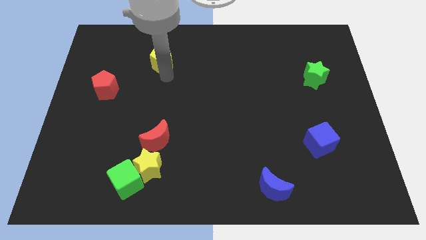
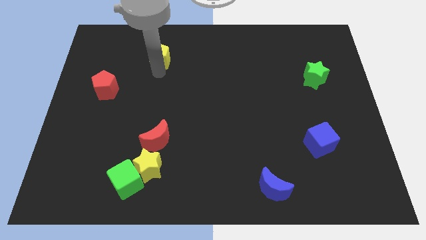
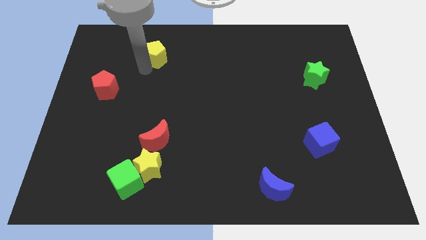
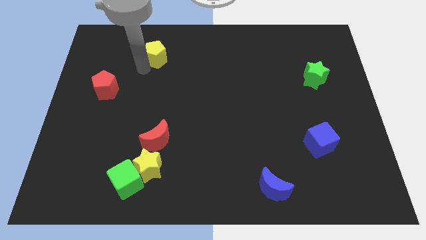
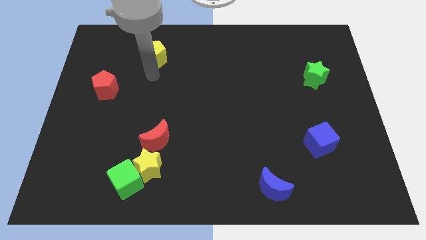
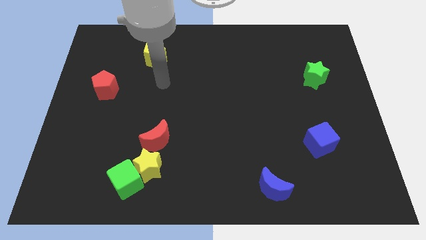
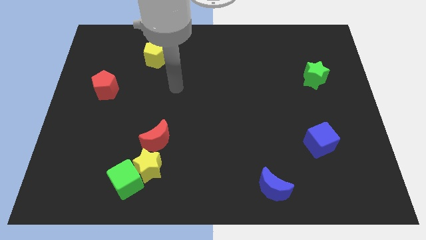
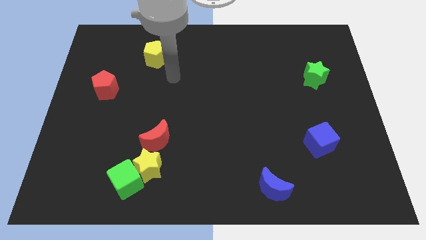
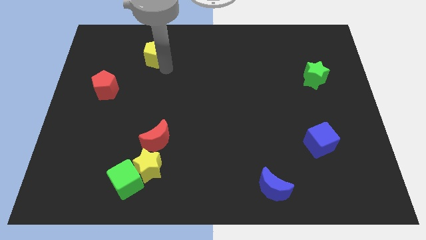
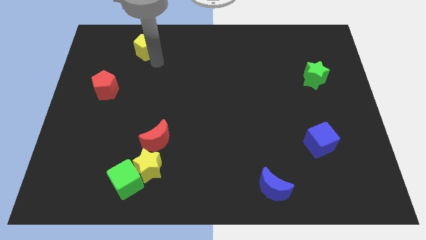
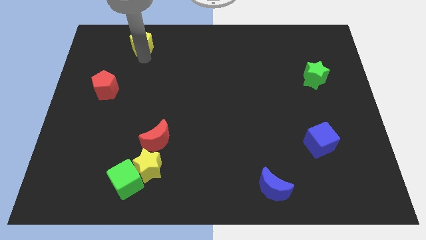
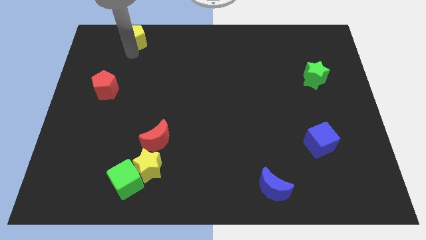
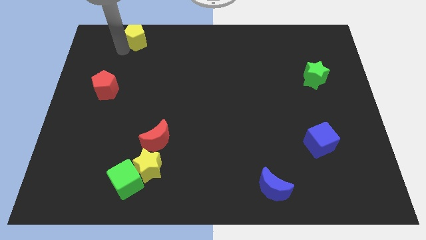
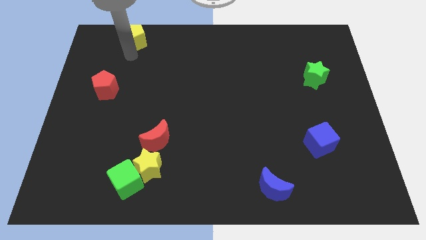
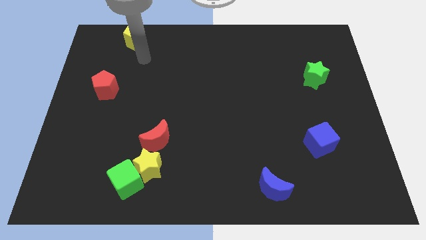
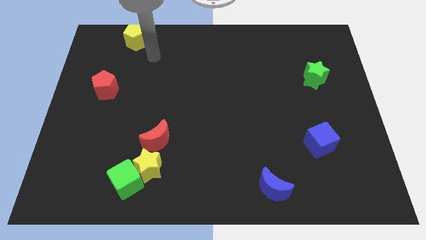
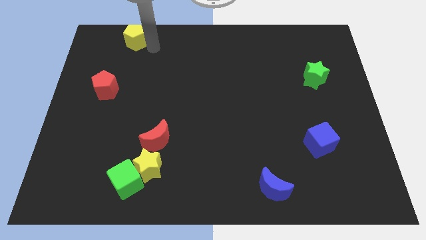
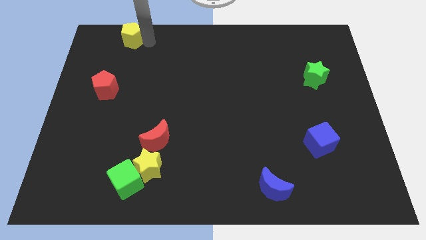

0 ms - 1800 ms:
slide the yellow pentagon towards the top left

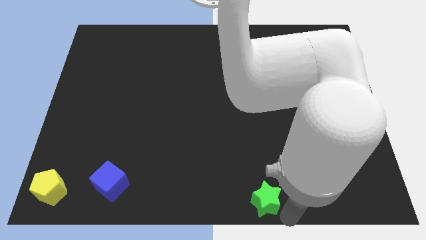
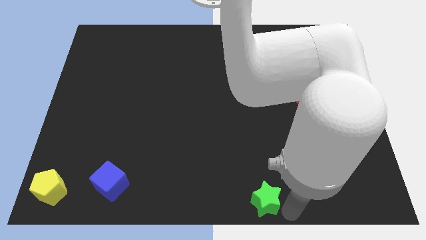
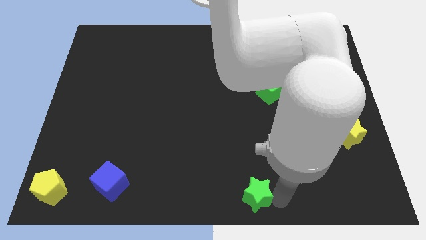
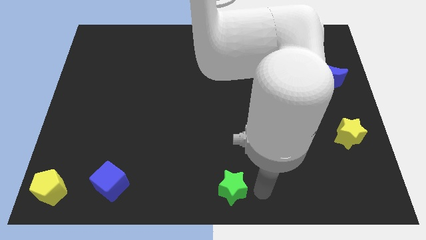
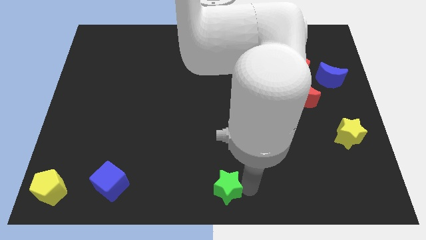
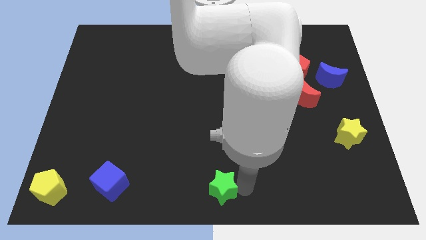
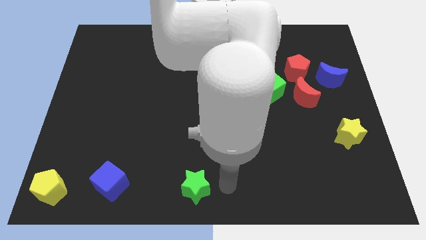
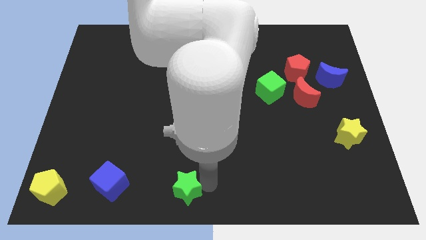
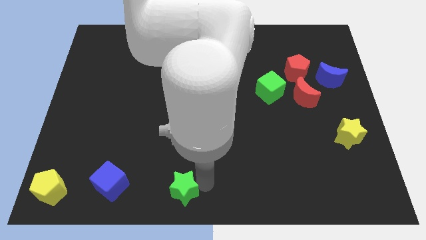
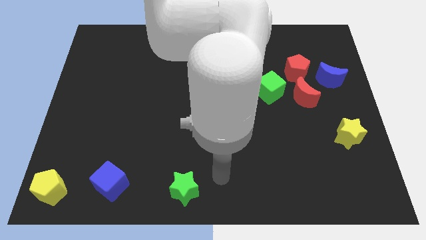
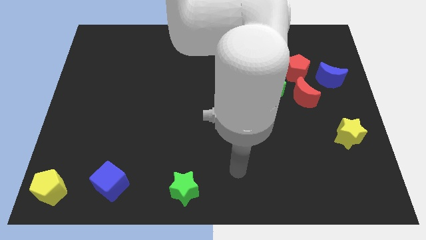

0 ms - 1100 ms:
slide green star horizontal to blue cube

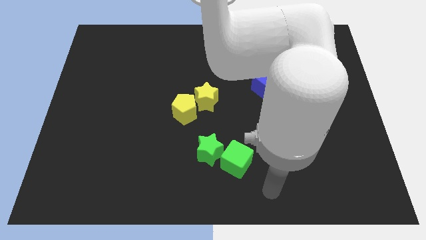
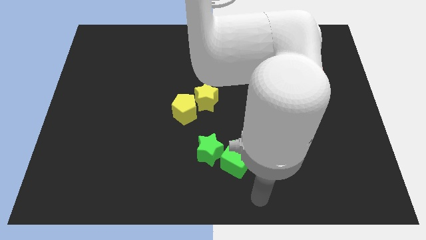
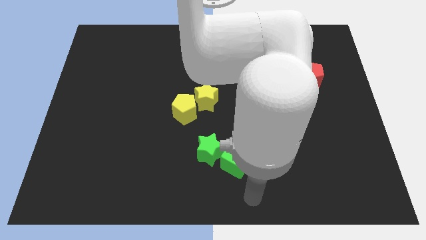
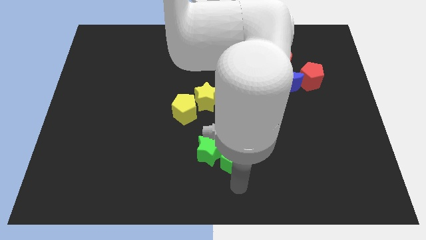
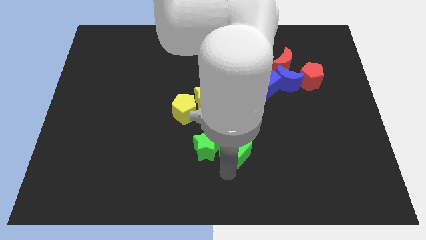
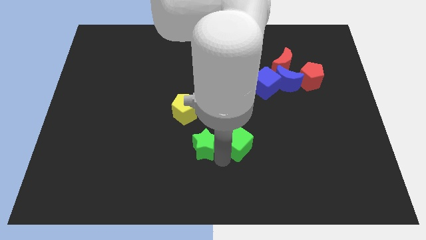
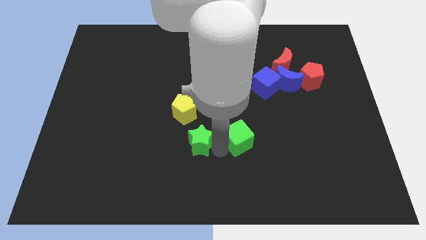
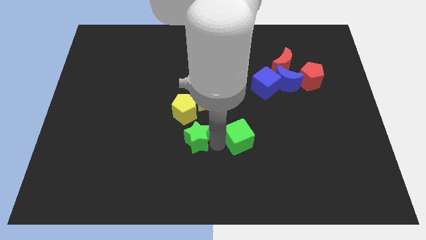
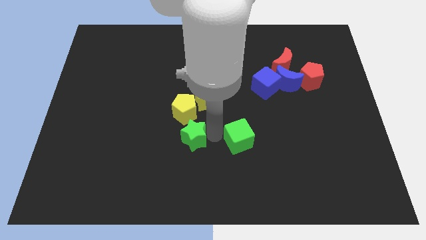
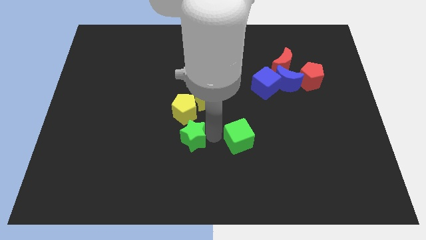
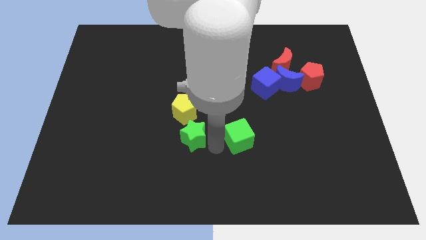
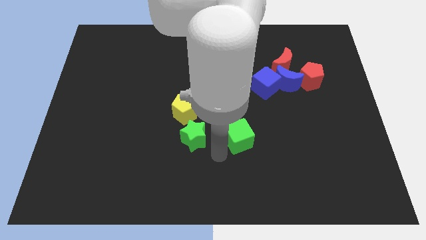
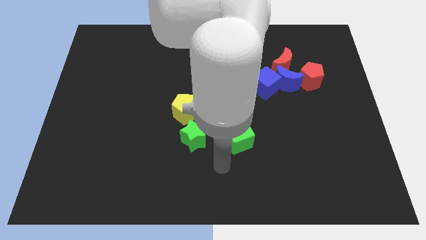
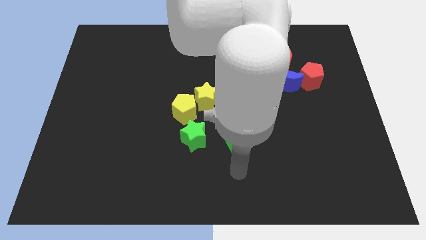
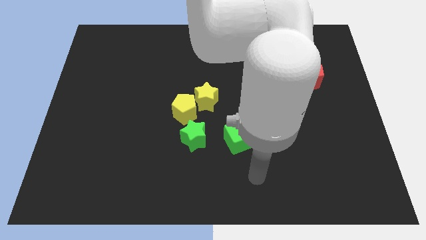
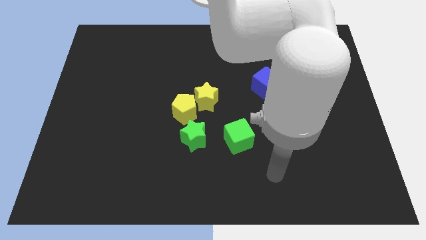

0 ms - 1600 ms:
separate green cube from green star

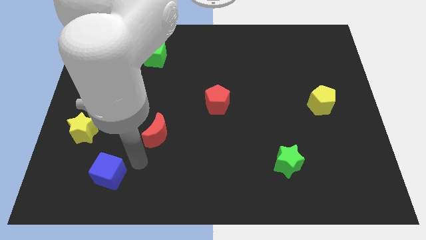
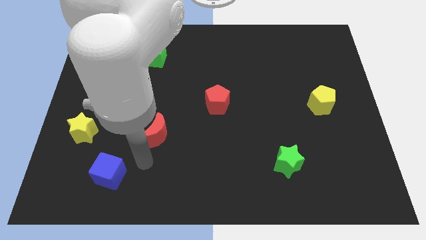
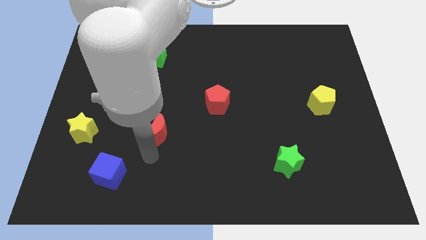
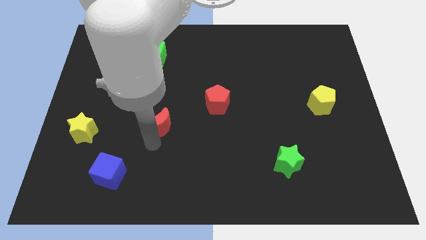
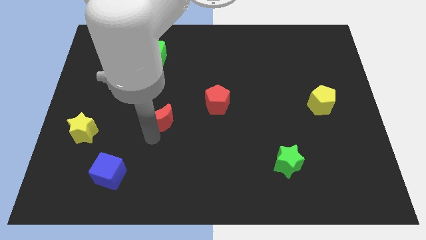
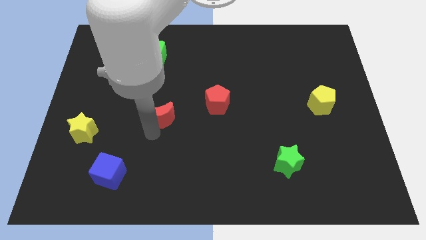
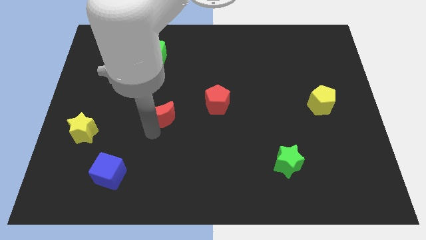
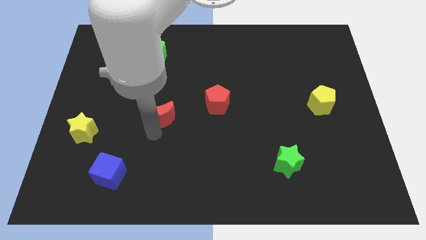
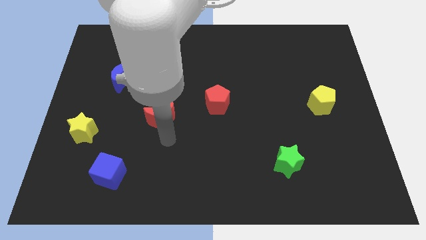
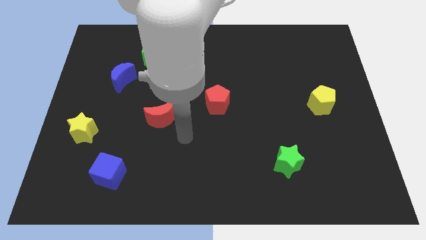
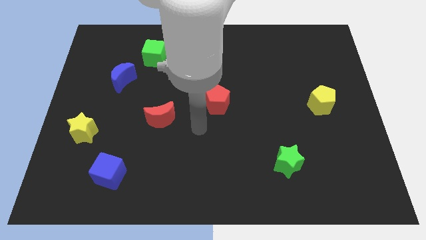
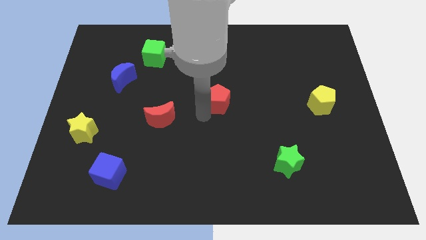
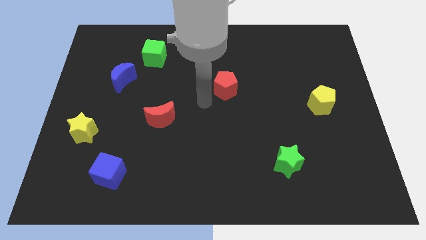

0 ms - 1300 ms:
move the red moon up slightly

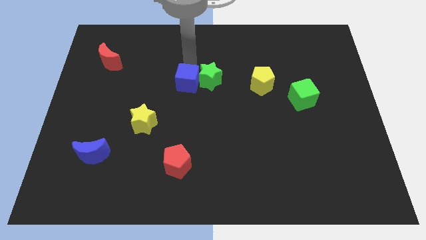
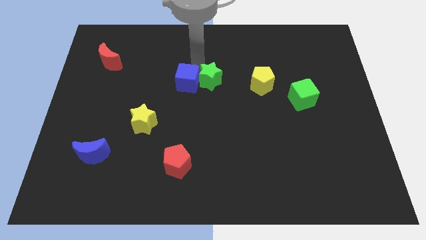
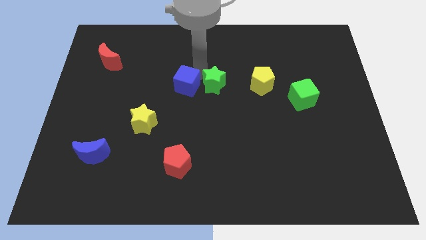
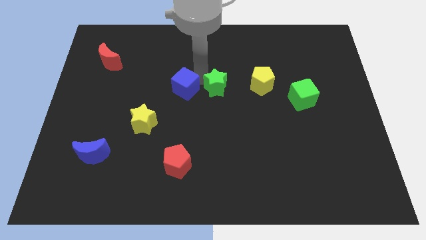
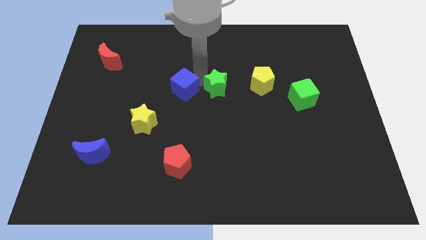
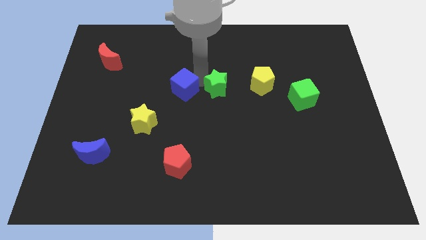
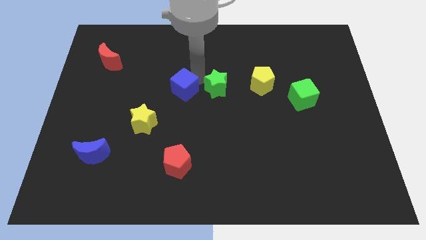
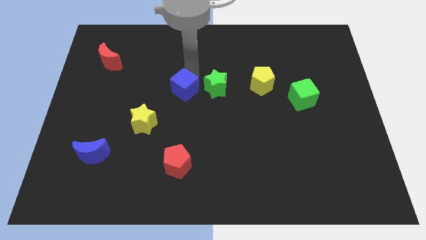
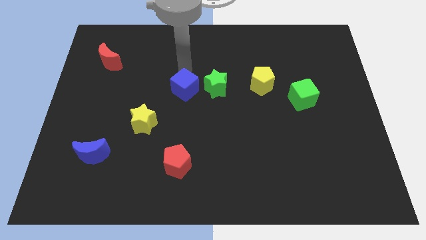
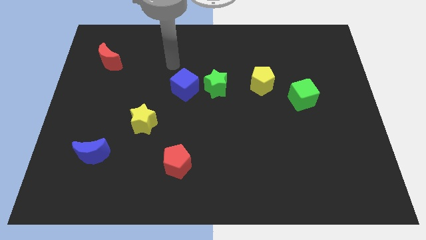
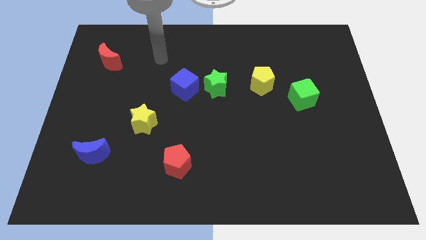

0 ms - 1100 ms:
separate green star and the blue cube

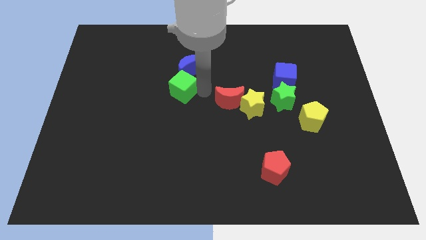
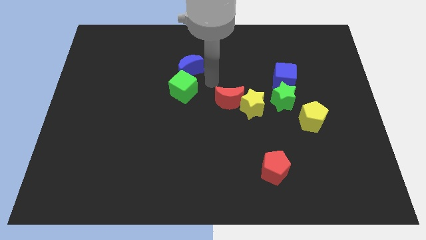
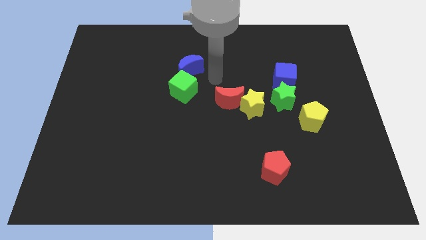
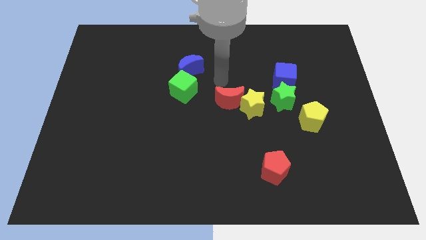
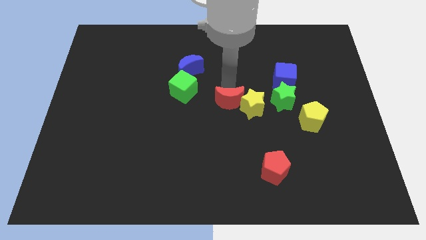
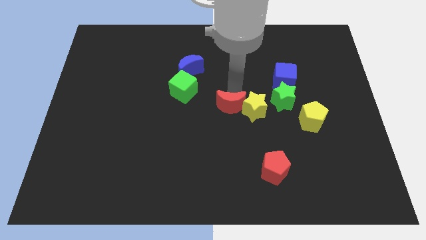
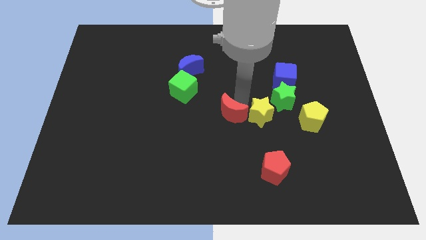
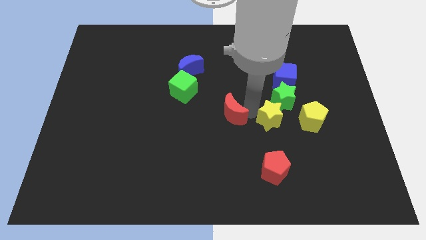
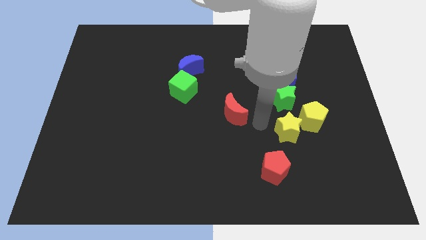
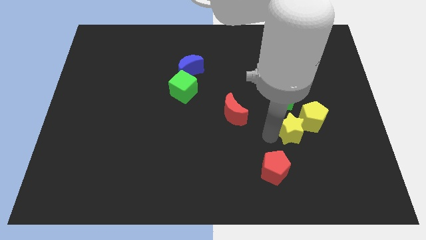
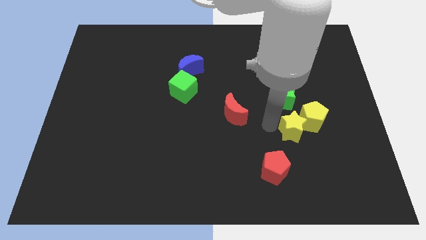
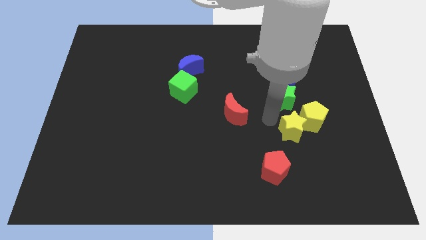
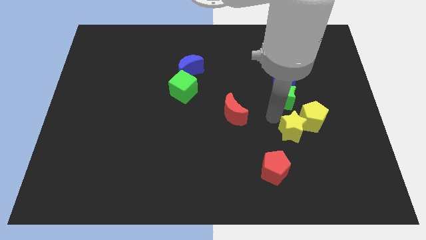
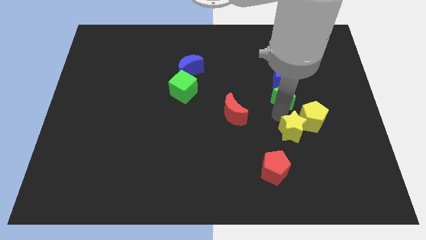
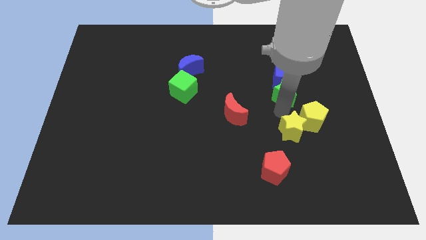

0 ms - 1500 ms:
move yellow star away from the red moon

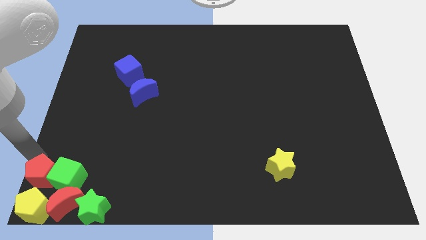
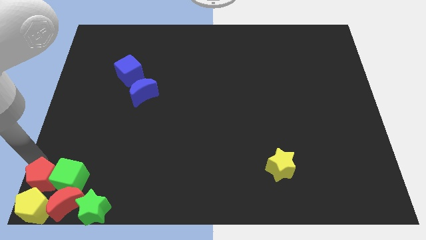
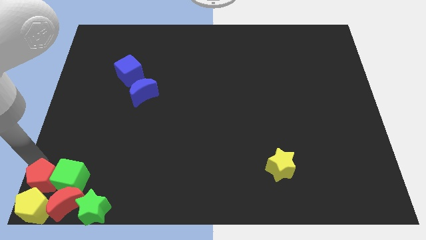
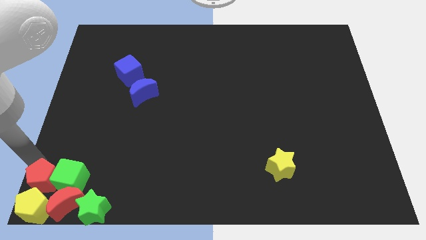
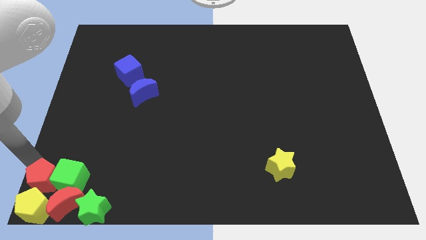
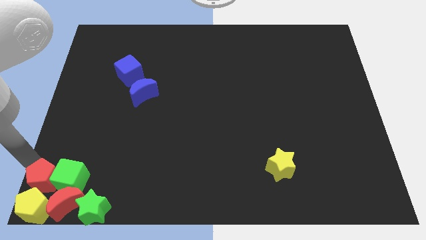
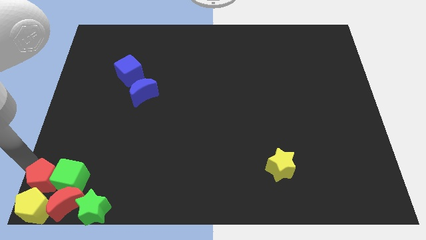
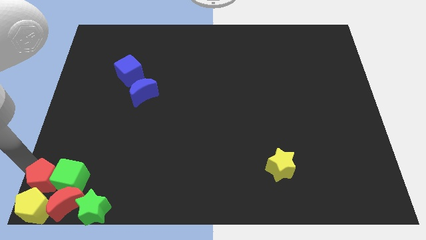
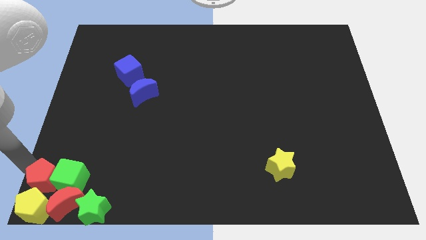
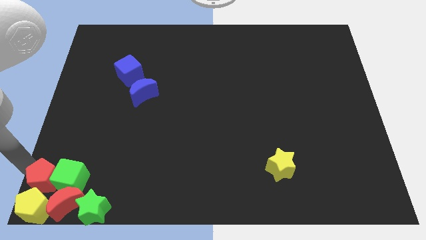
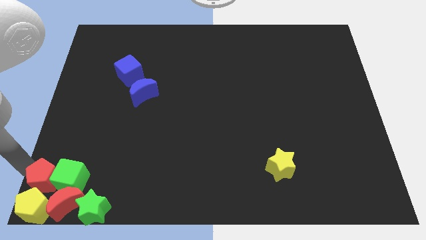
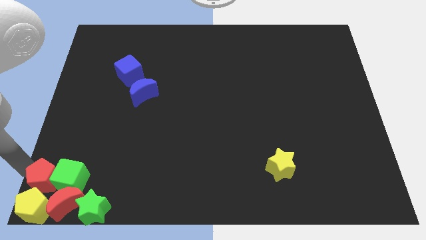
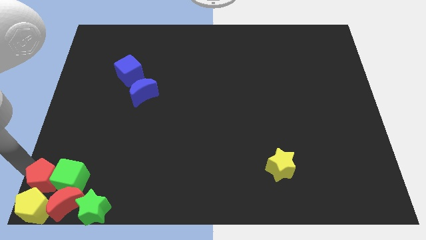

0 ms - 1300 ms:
push red pentagon in yellow pentagon
